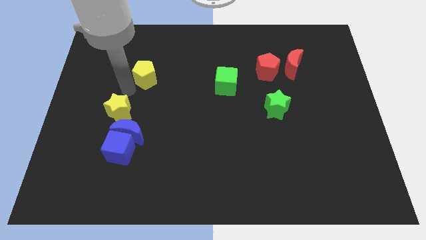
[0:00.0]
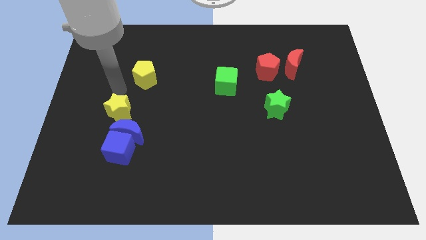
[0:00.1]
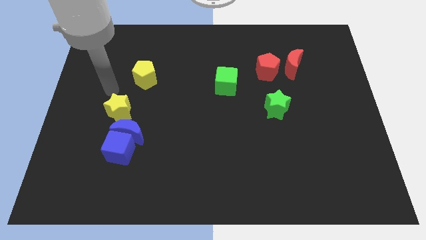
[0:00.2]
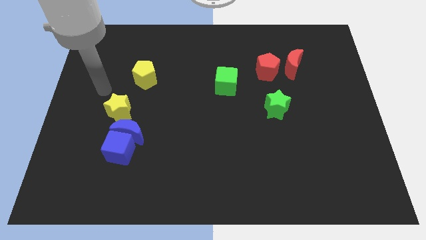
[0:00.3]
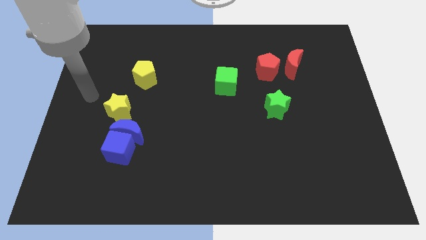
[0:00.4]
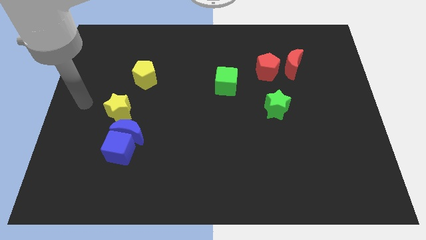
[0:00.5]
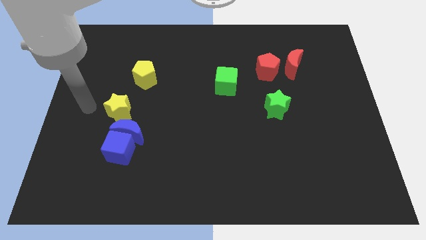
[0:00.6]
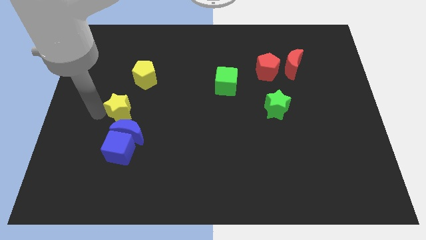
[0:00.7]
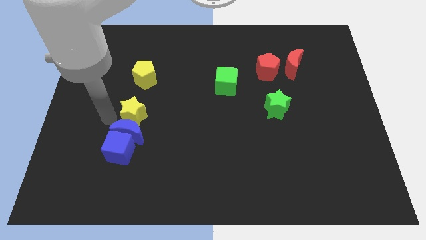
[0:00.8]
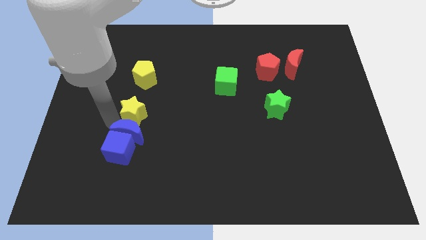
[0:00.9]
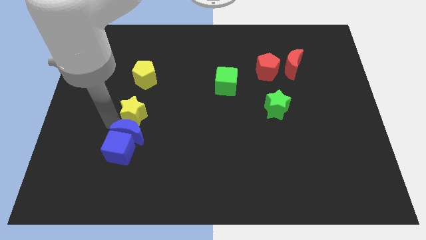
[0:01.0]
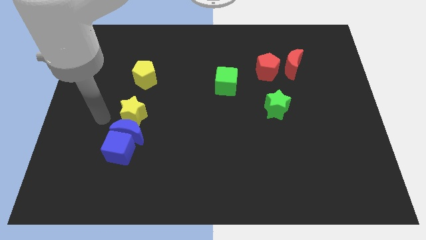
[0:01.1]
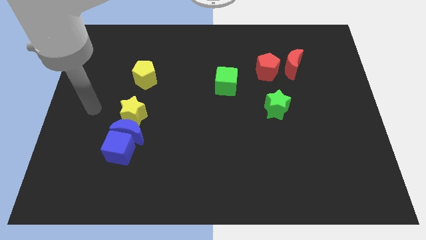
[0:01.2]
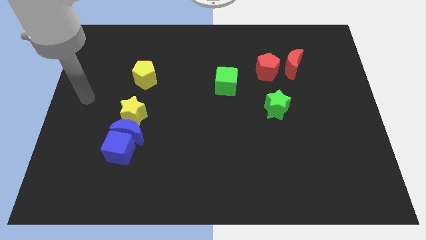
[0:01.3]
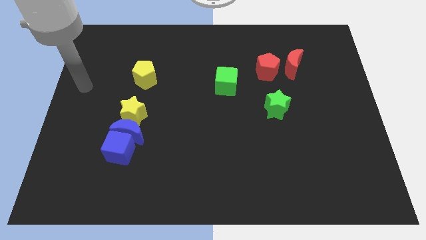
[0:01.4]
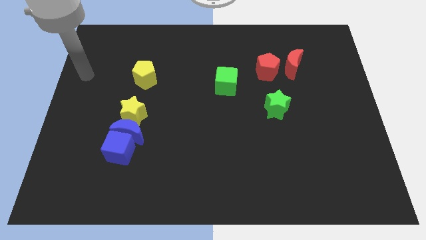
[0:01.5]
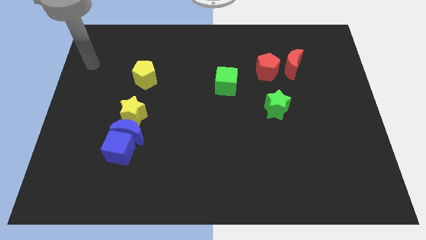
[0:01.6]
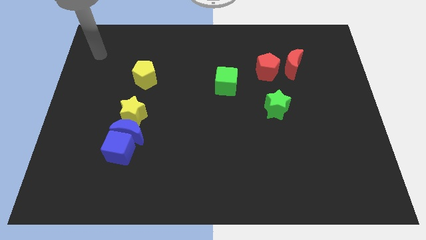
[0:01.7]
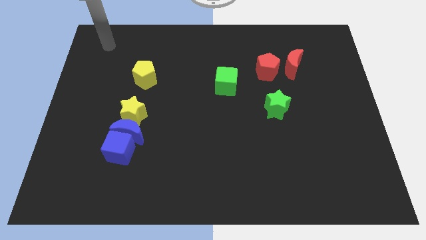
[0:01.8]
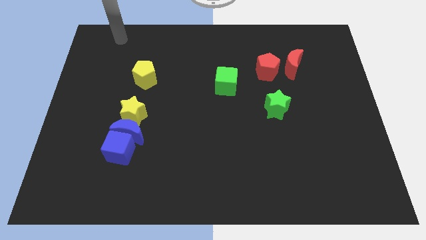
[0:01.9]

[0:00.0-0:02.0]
slightly move the yellow star towards right

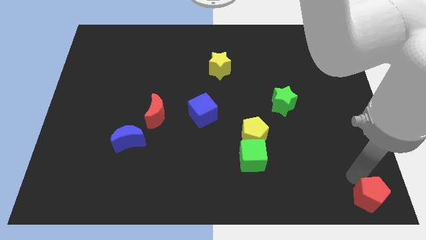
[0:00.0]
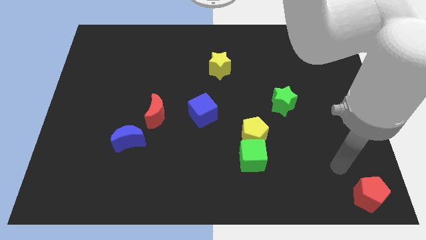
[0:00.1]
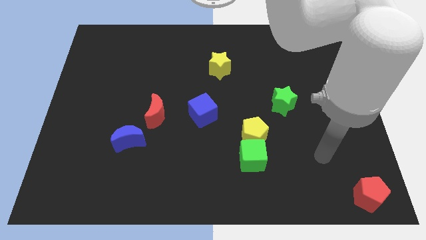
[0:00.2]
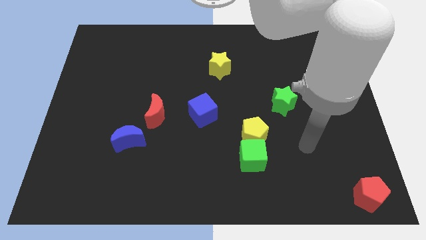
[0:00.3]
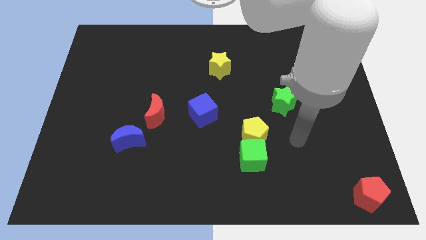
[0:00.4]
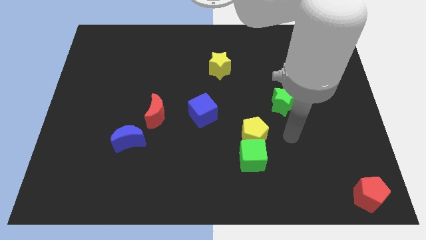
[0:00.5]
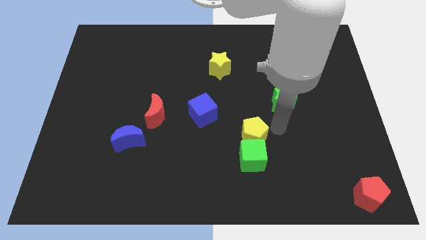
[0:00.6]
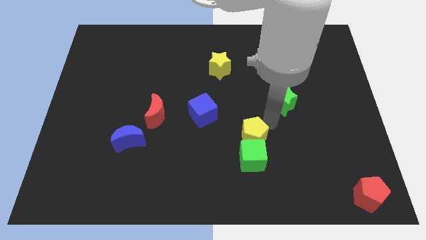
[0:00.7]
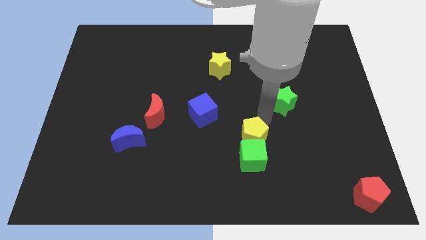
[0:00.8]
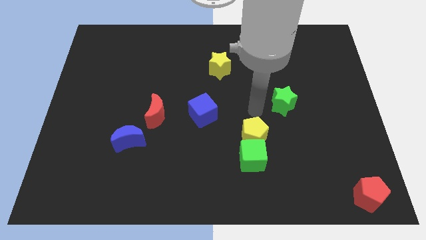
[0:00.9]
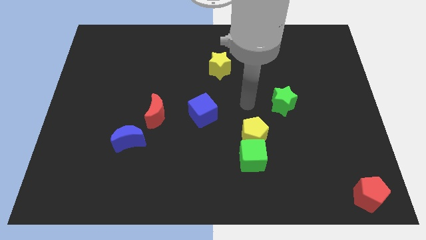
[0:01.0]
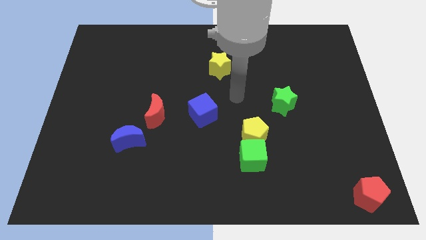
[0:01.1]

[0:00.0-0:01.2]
slide your arm away from red pentagon

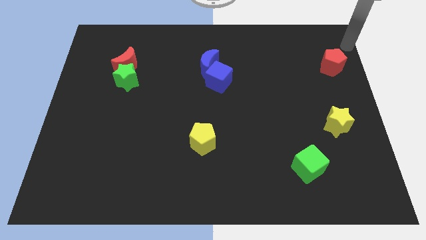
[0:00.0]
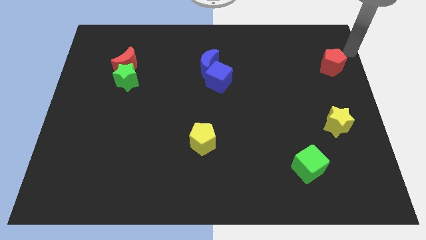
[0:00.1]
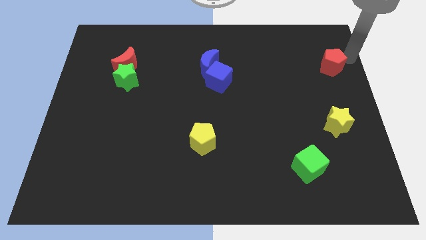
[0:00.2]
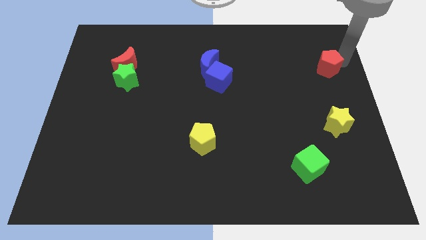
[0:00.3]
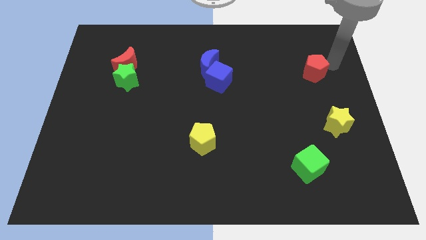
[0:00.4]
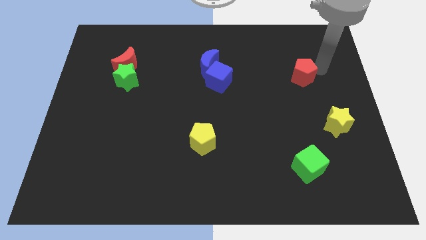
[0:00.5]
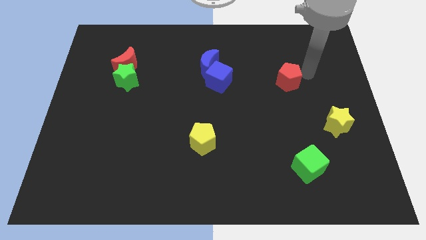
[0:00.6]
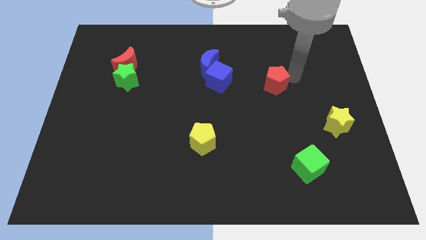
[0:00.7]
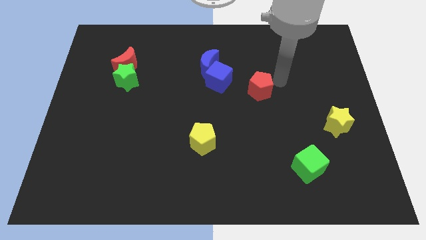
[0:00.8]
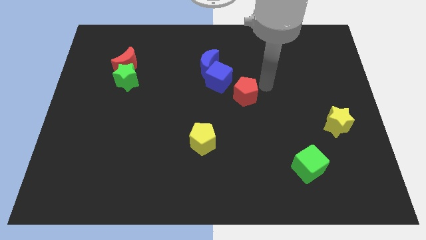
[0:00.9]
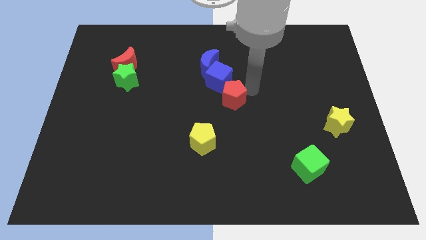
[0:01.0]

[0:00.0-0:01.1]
put the red pentagon to the bottom right to the blue cube

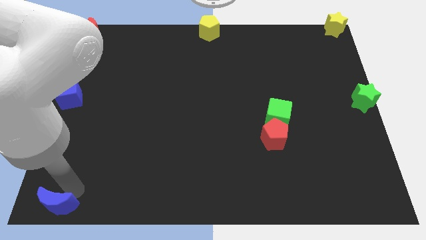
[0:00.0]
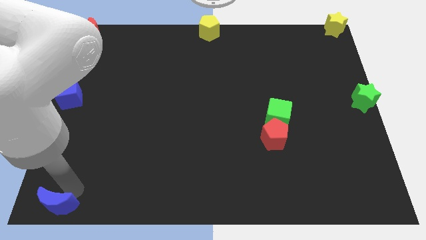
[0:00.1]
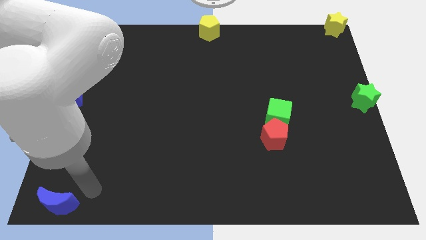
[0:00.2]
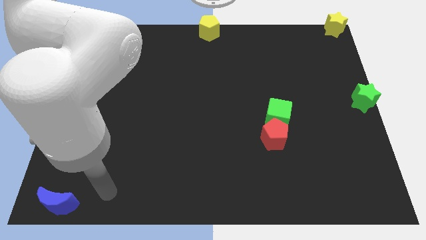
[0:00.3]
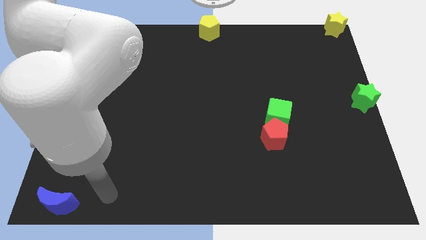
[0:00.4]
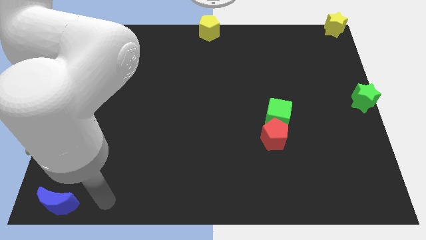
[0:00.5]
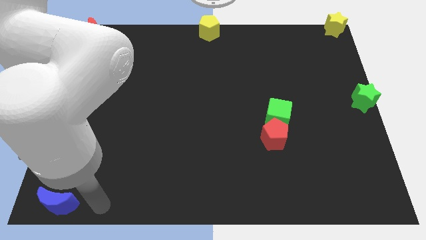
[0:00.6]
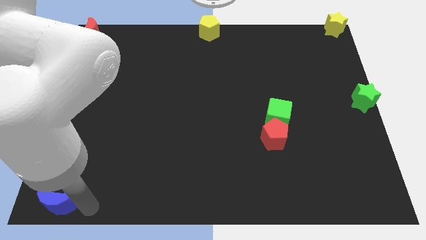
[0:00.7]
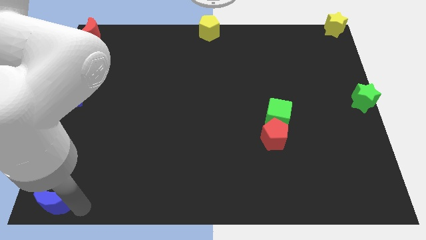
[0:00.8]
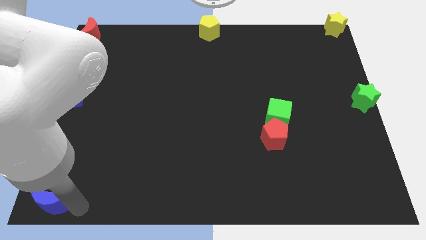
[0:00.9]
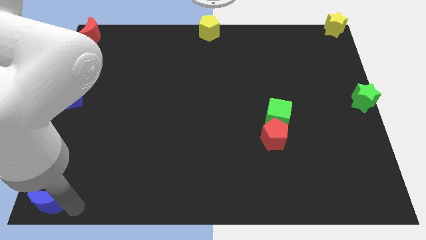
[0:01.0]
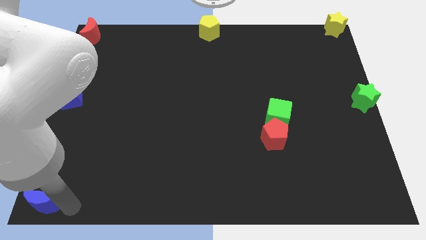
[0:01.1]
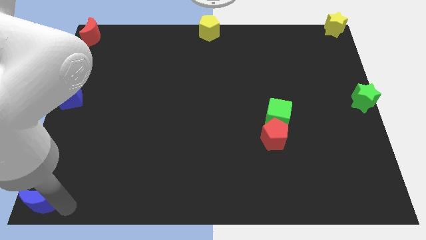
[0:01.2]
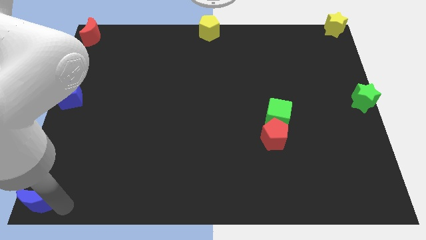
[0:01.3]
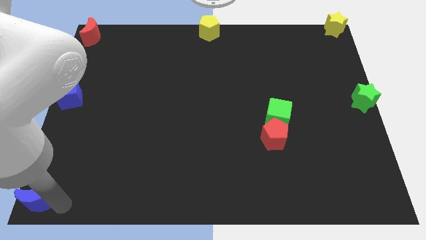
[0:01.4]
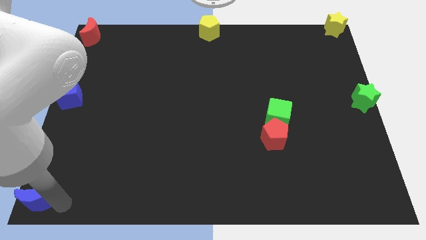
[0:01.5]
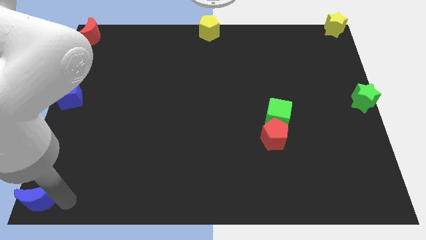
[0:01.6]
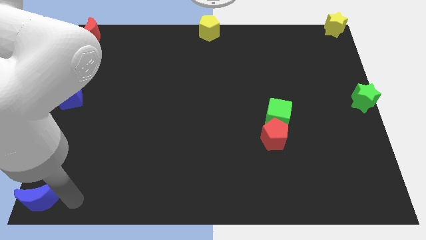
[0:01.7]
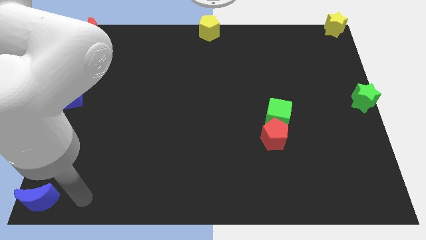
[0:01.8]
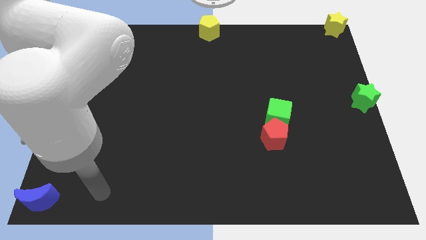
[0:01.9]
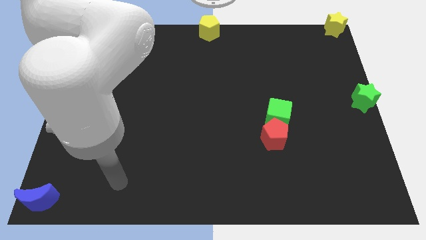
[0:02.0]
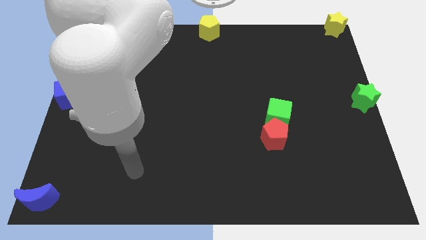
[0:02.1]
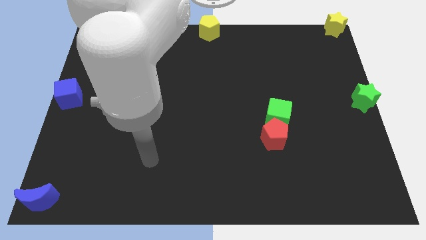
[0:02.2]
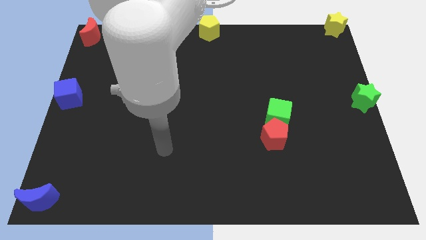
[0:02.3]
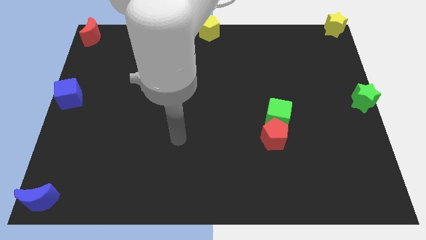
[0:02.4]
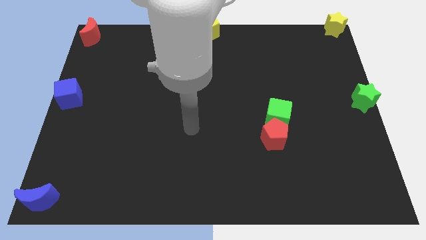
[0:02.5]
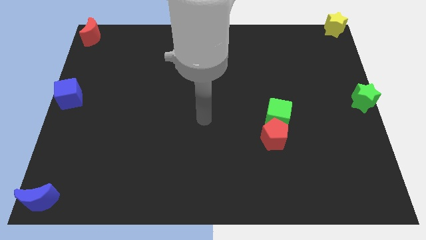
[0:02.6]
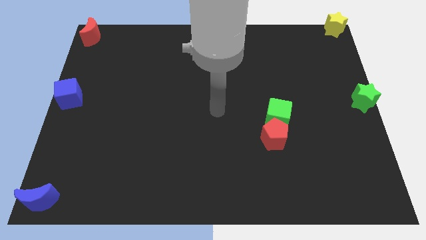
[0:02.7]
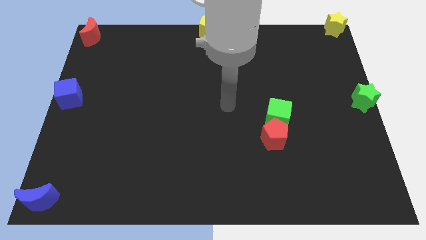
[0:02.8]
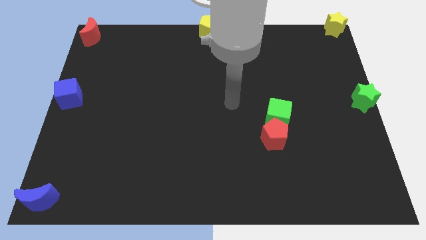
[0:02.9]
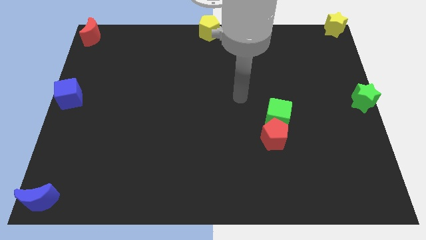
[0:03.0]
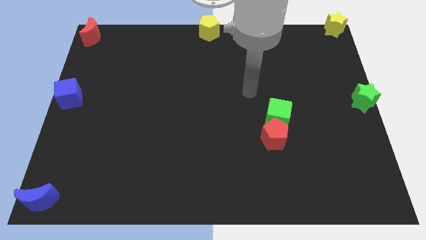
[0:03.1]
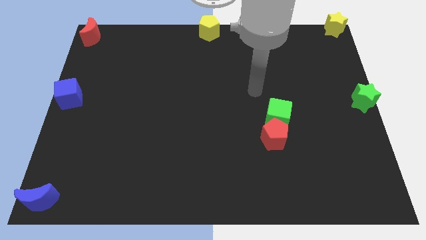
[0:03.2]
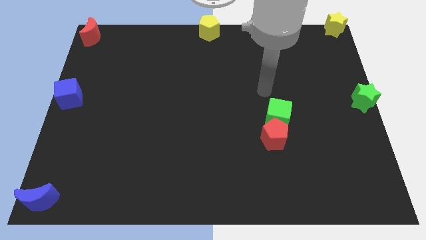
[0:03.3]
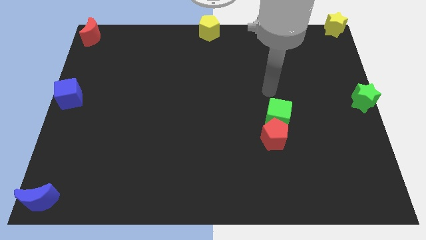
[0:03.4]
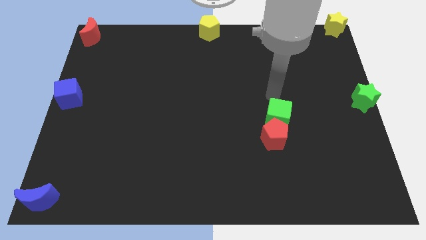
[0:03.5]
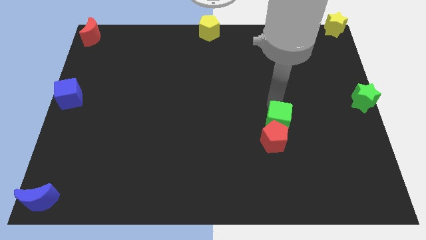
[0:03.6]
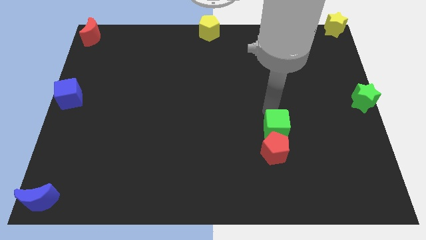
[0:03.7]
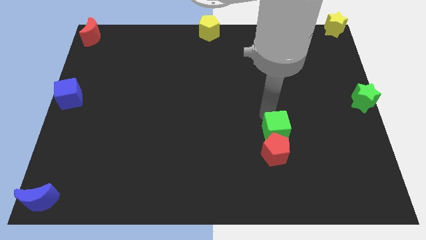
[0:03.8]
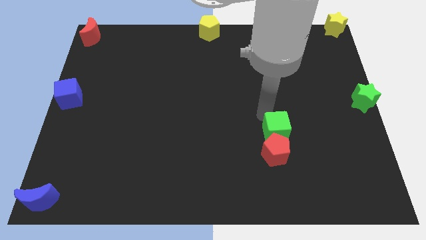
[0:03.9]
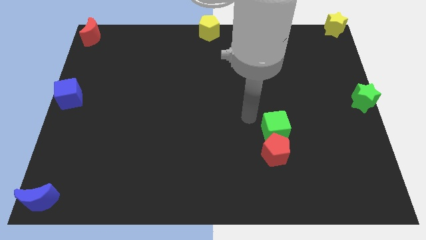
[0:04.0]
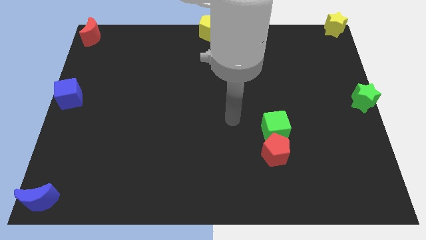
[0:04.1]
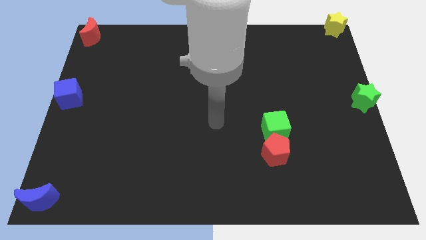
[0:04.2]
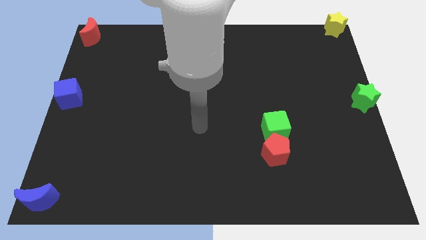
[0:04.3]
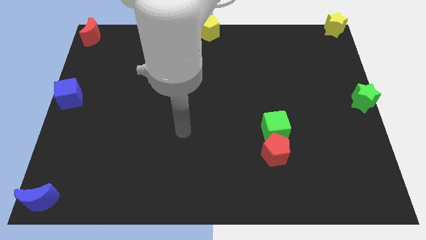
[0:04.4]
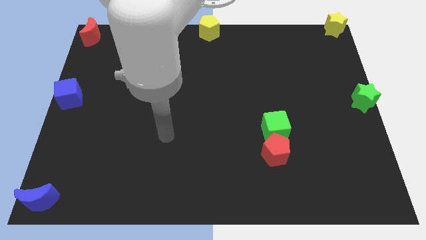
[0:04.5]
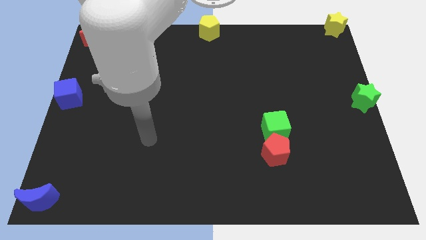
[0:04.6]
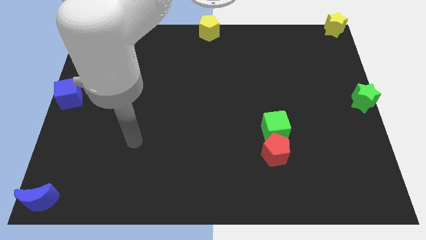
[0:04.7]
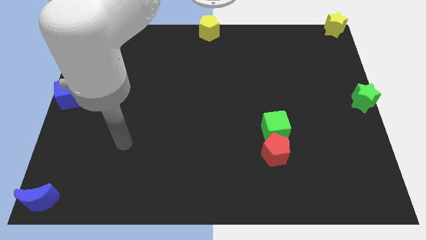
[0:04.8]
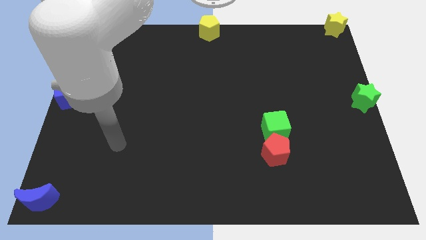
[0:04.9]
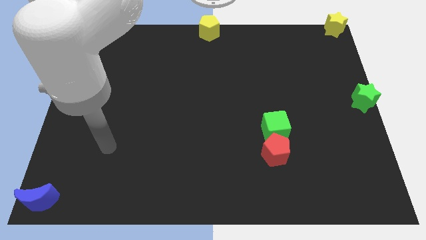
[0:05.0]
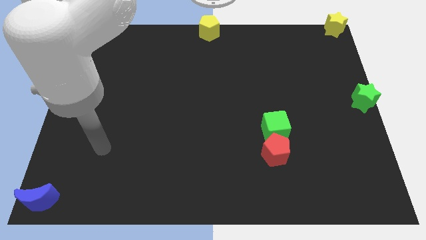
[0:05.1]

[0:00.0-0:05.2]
slightly push the green cube along with red pentagon towards the bottom of board
